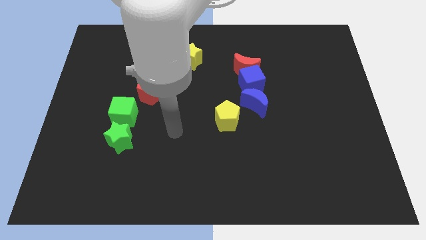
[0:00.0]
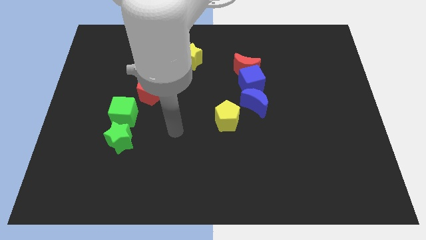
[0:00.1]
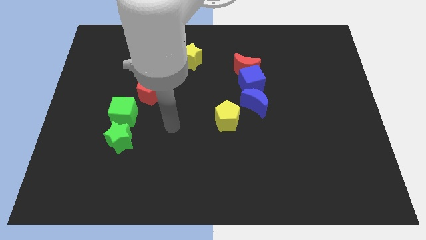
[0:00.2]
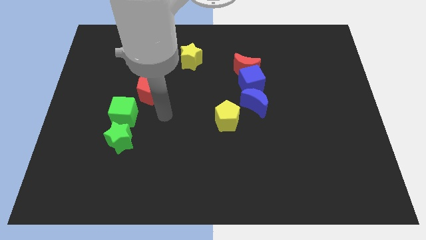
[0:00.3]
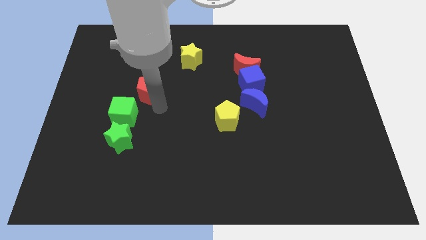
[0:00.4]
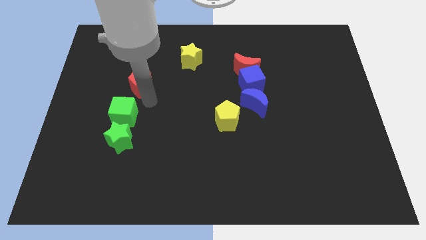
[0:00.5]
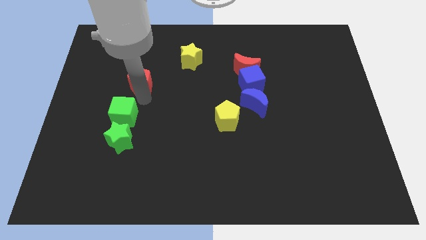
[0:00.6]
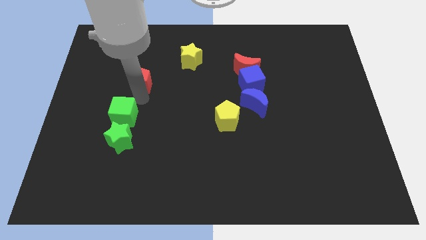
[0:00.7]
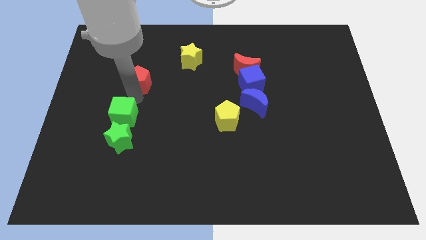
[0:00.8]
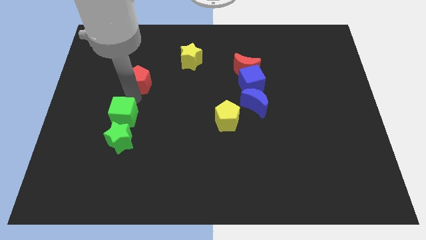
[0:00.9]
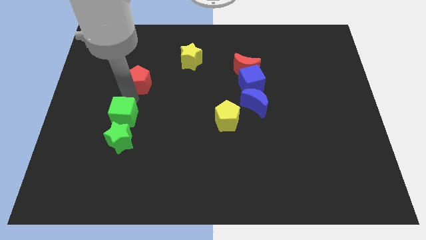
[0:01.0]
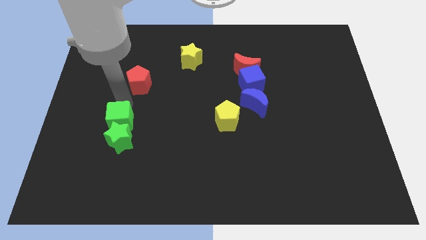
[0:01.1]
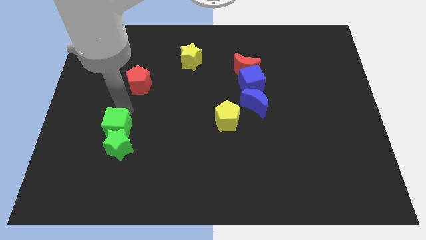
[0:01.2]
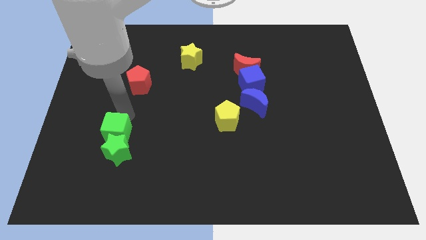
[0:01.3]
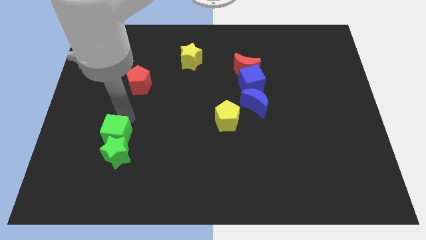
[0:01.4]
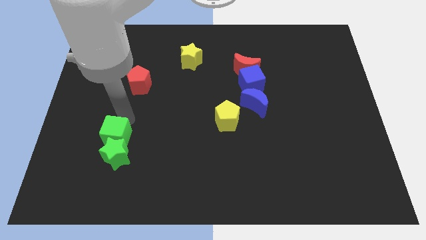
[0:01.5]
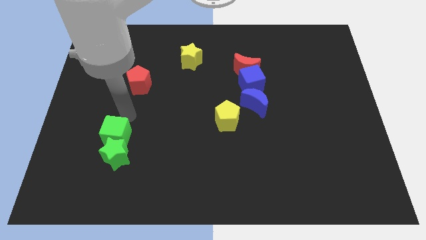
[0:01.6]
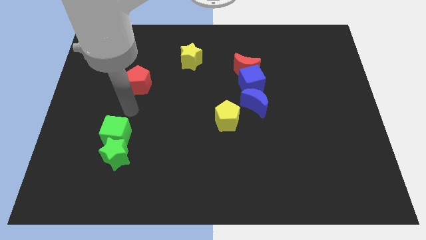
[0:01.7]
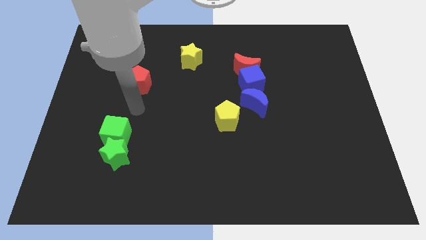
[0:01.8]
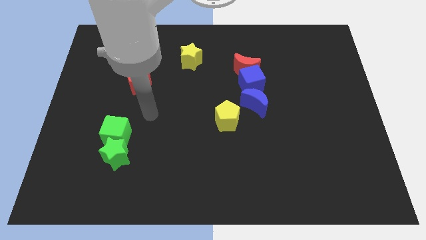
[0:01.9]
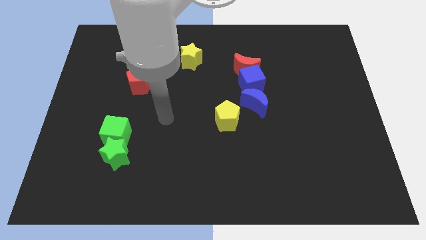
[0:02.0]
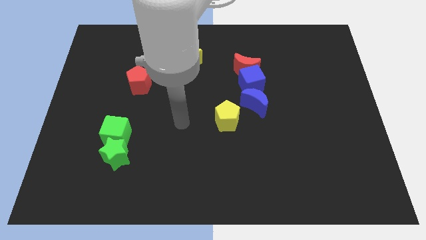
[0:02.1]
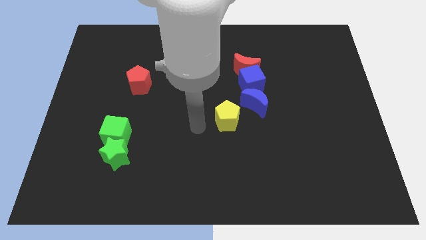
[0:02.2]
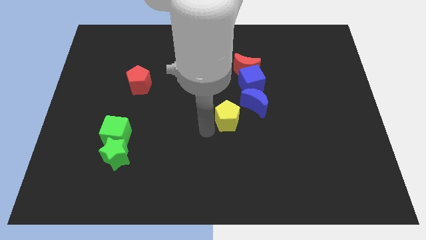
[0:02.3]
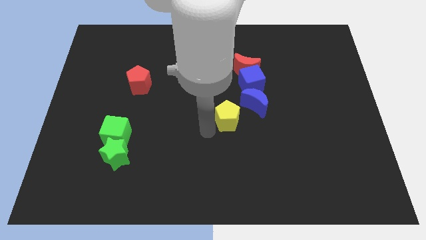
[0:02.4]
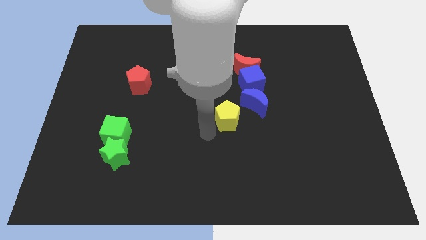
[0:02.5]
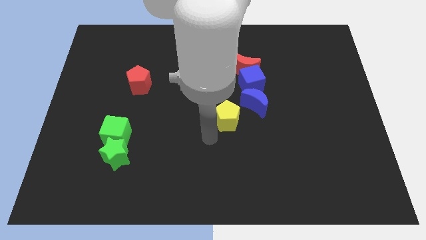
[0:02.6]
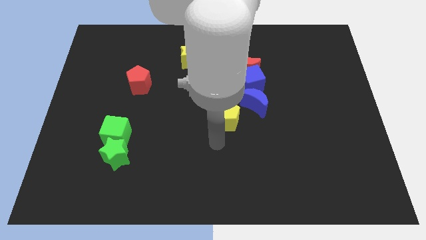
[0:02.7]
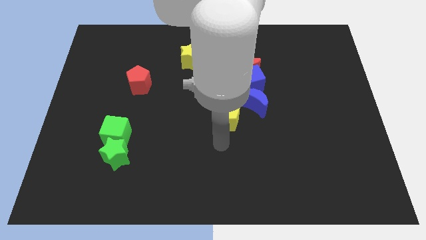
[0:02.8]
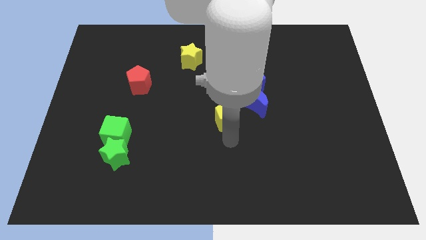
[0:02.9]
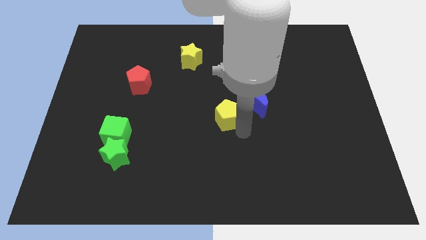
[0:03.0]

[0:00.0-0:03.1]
slide green cube and green star towards bottom

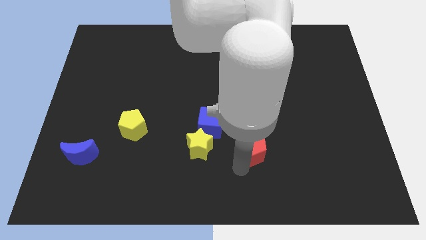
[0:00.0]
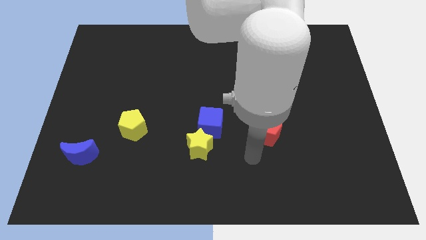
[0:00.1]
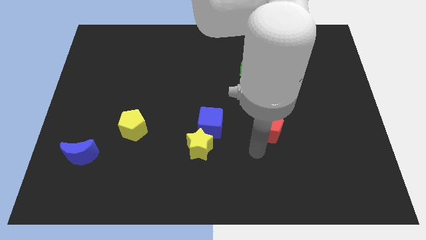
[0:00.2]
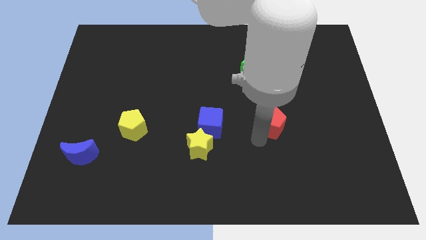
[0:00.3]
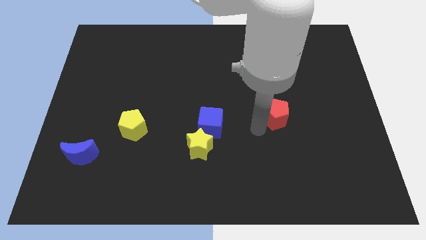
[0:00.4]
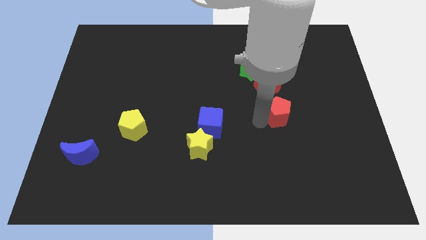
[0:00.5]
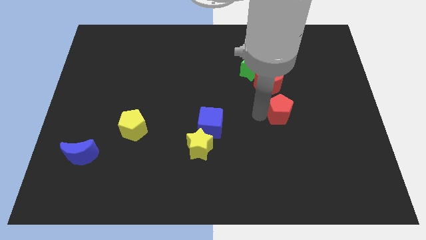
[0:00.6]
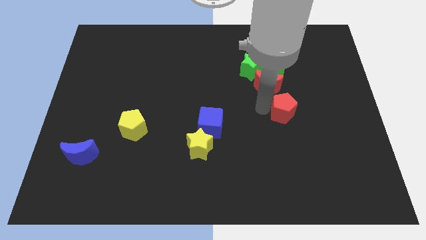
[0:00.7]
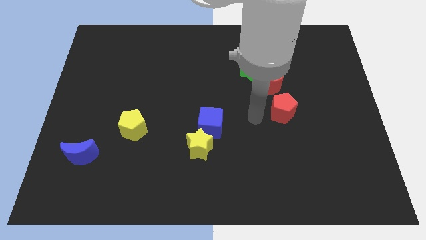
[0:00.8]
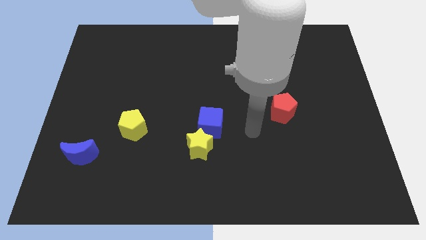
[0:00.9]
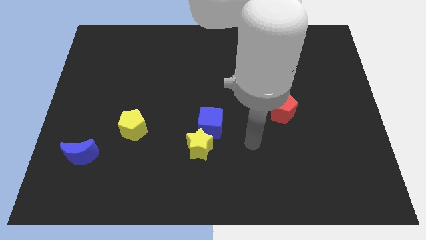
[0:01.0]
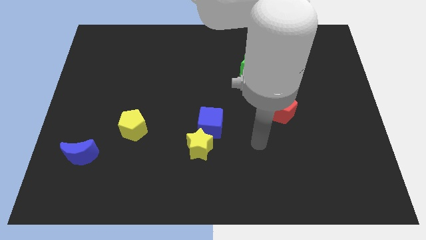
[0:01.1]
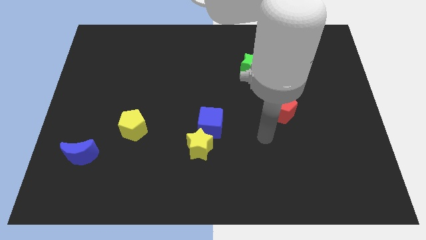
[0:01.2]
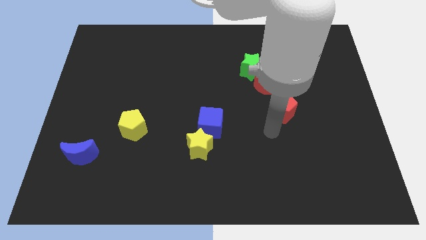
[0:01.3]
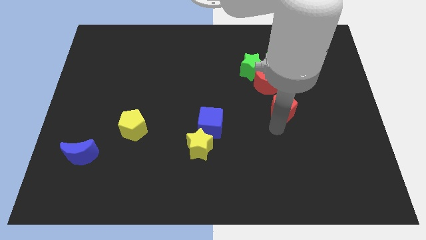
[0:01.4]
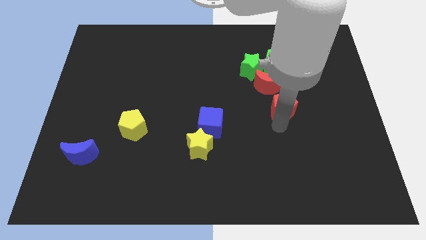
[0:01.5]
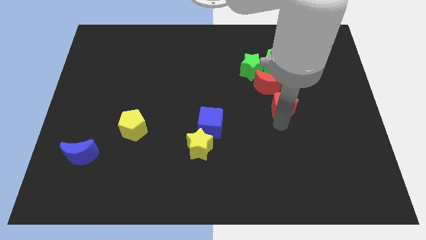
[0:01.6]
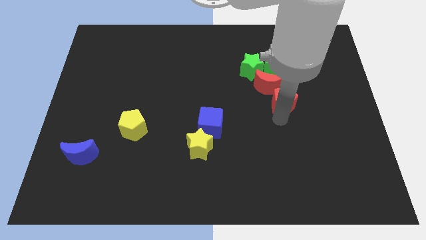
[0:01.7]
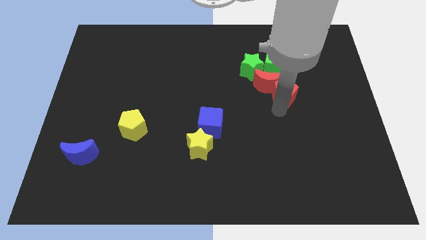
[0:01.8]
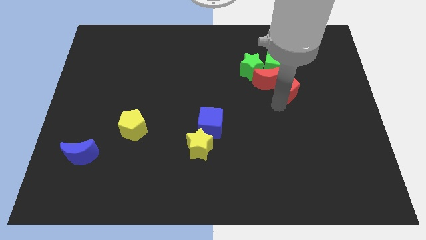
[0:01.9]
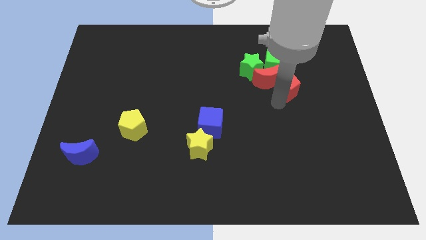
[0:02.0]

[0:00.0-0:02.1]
place the red pentagon near the red crescent

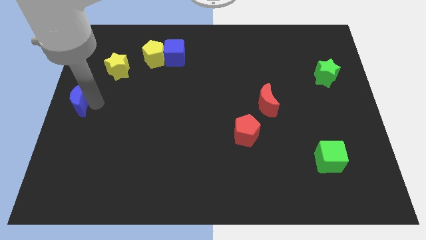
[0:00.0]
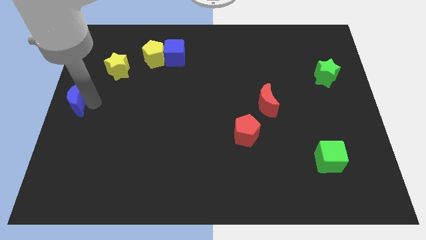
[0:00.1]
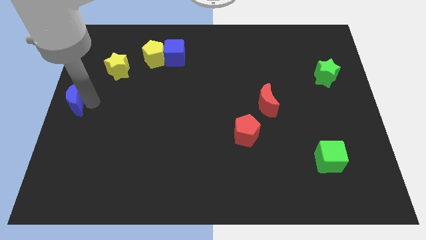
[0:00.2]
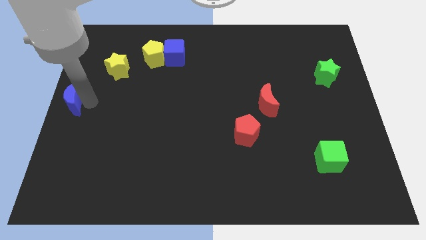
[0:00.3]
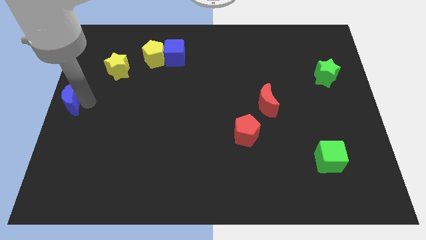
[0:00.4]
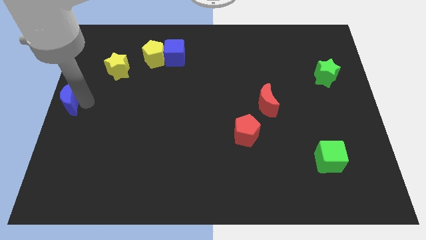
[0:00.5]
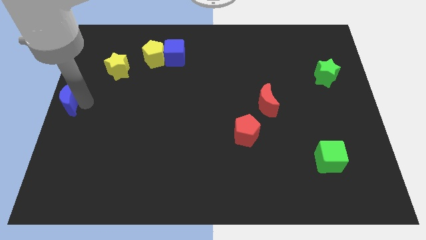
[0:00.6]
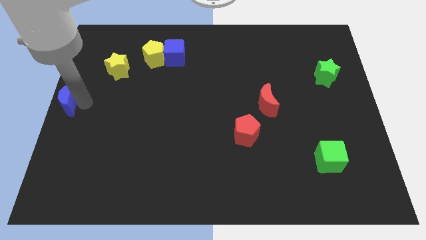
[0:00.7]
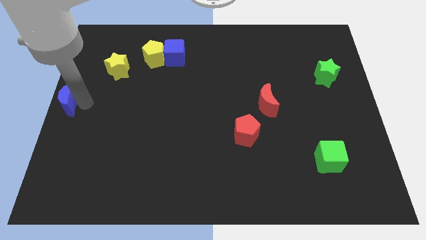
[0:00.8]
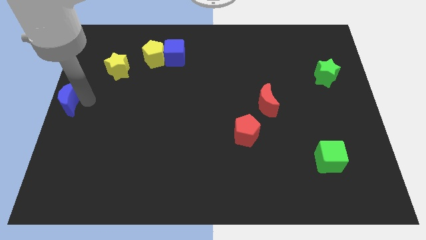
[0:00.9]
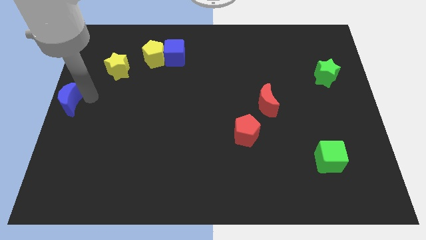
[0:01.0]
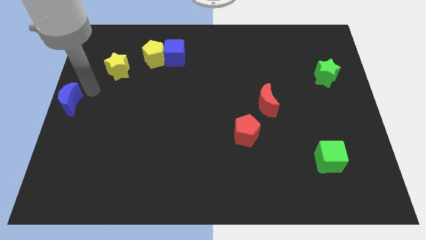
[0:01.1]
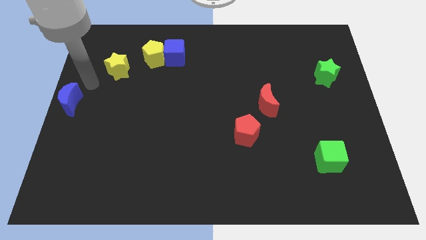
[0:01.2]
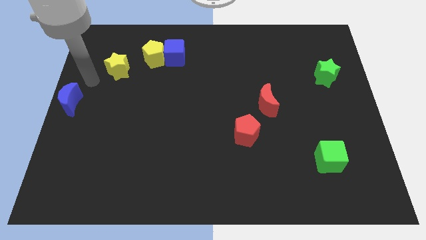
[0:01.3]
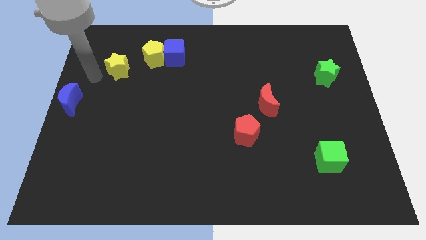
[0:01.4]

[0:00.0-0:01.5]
push the blue moon to the left center

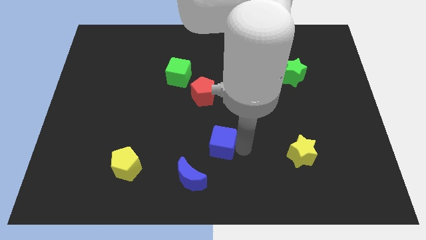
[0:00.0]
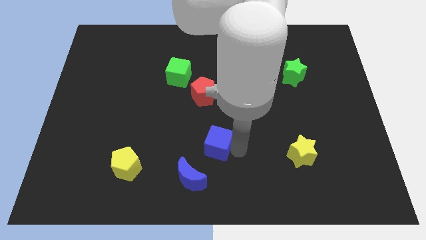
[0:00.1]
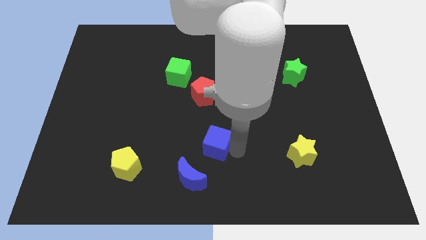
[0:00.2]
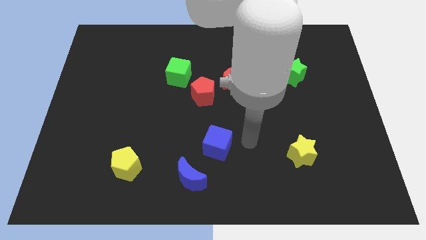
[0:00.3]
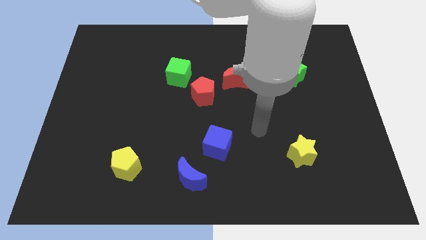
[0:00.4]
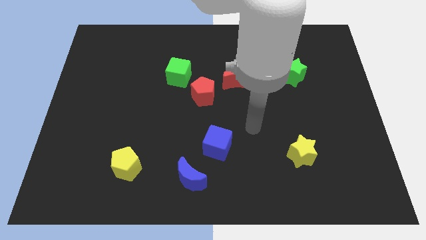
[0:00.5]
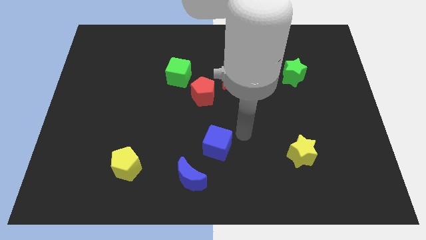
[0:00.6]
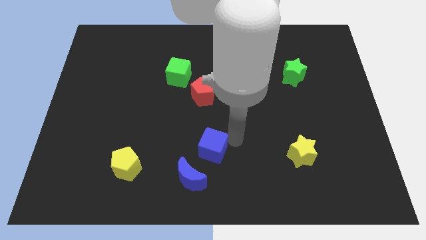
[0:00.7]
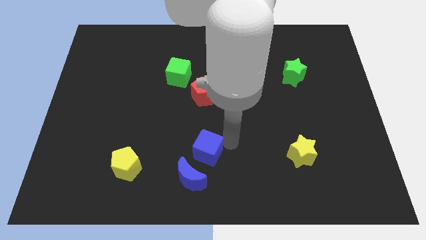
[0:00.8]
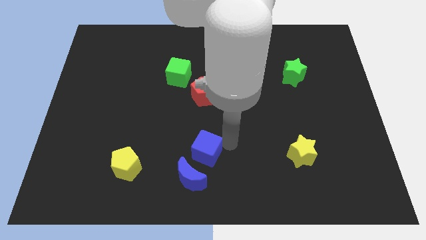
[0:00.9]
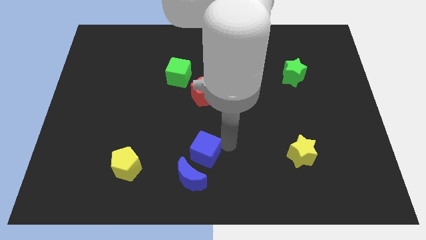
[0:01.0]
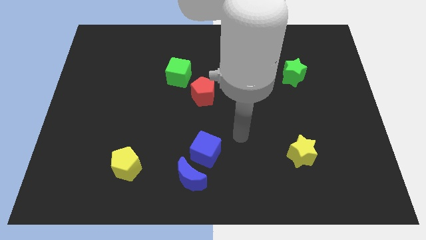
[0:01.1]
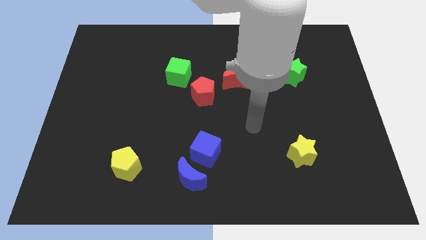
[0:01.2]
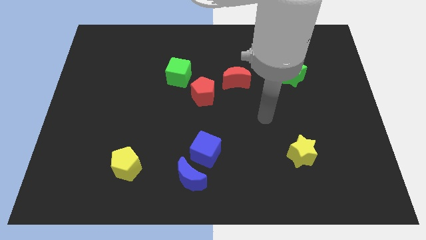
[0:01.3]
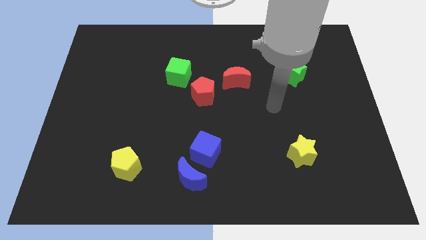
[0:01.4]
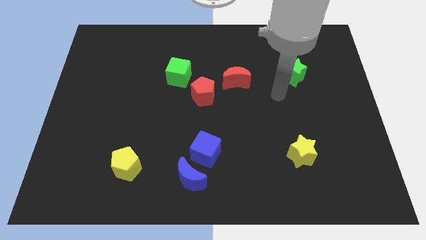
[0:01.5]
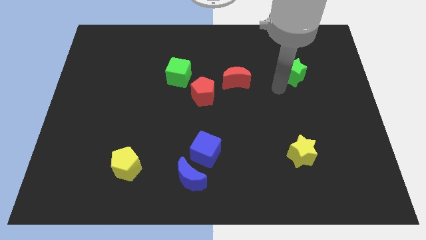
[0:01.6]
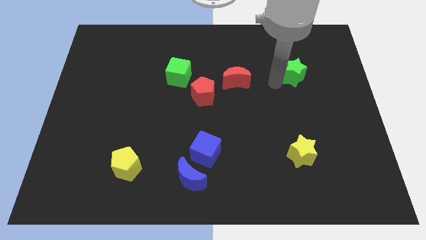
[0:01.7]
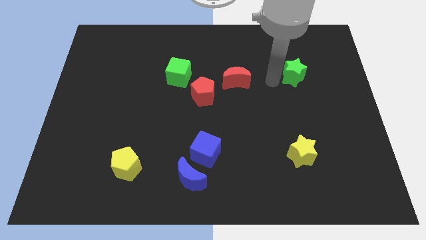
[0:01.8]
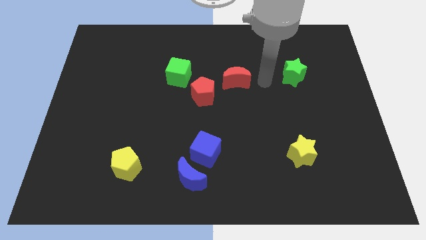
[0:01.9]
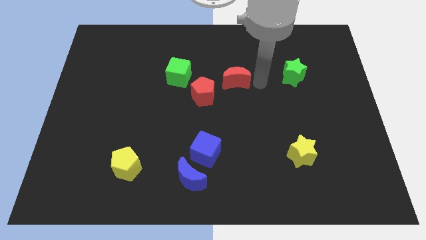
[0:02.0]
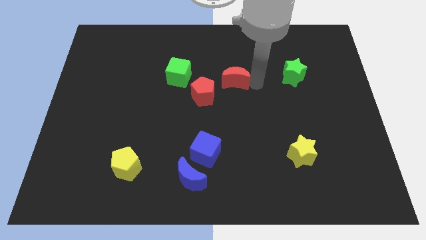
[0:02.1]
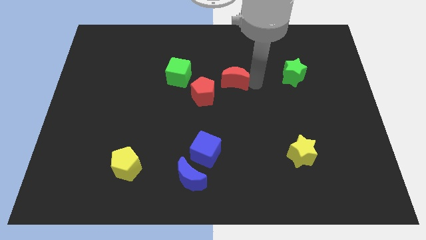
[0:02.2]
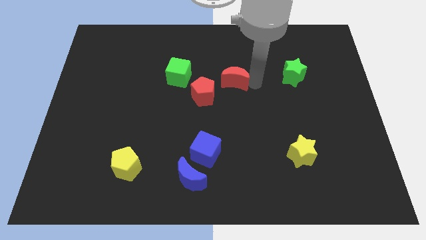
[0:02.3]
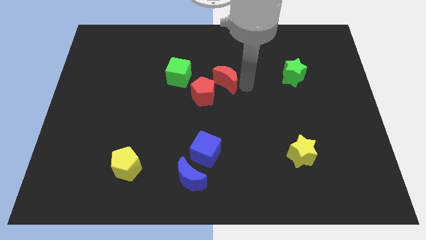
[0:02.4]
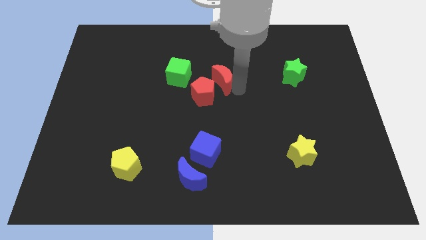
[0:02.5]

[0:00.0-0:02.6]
push the blue cube into blue moon and red moon into red pentagon
